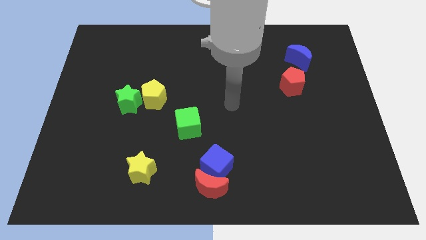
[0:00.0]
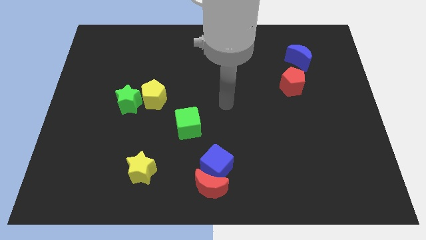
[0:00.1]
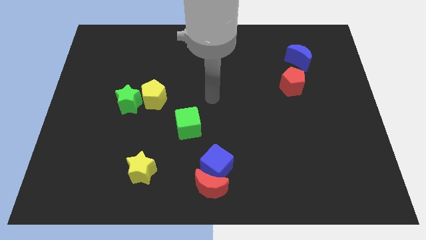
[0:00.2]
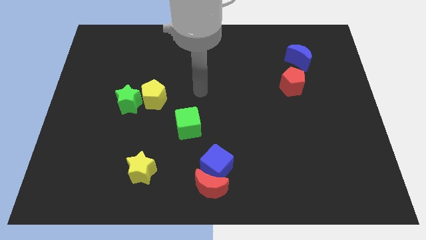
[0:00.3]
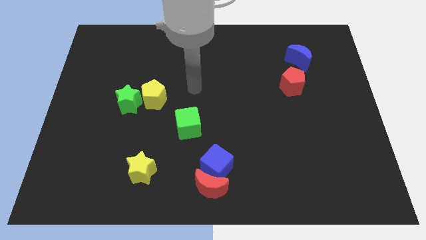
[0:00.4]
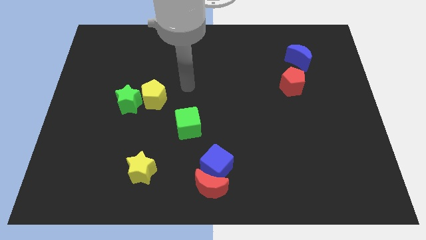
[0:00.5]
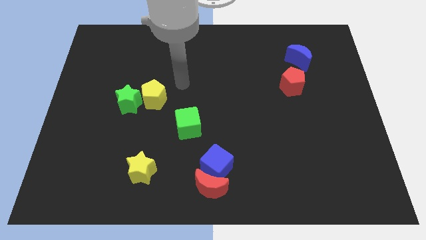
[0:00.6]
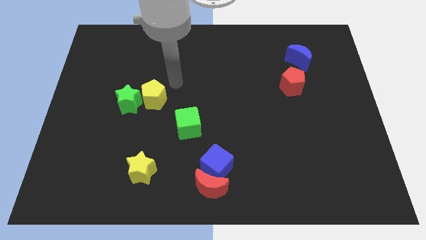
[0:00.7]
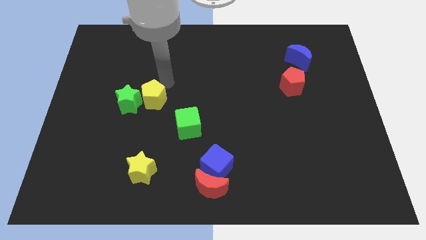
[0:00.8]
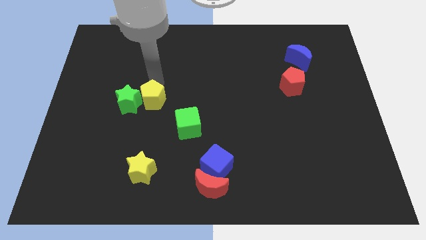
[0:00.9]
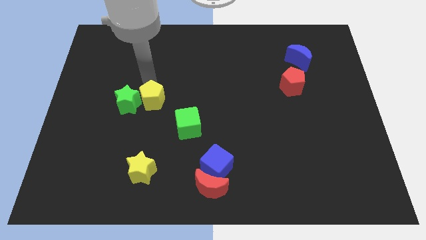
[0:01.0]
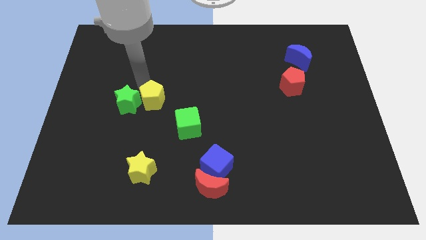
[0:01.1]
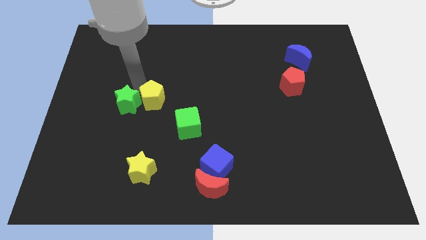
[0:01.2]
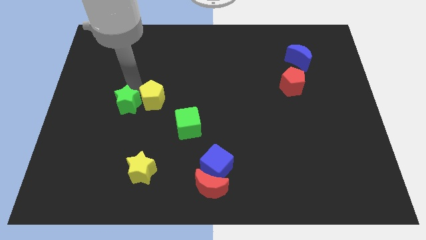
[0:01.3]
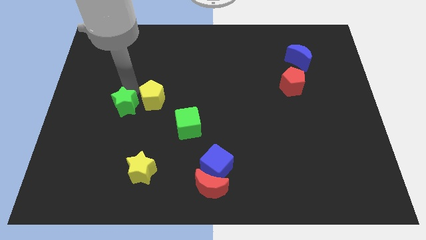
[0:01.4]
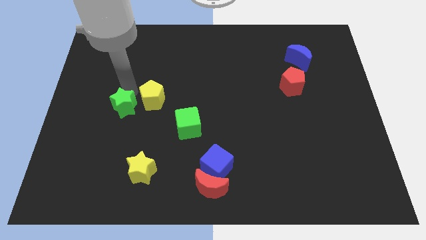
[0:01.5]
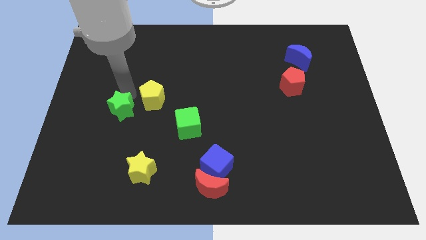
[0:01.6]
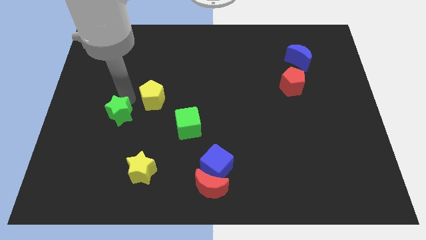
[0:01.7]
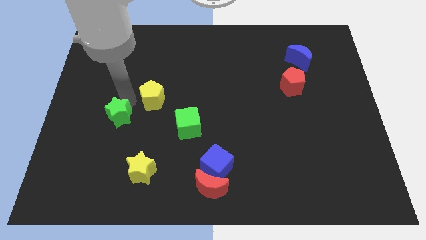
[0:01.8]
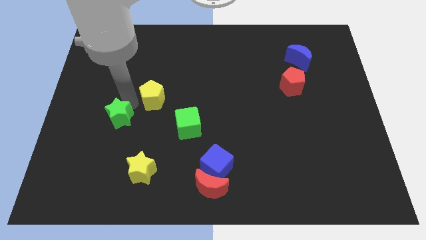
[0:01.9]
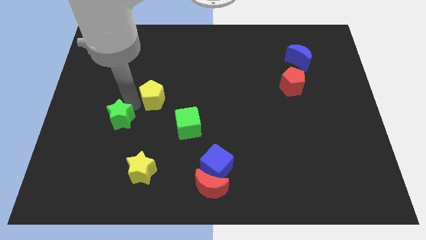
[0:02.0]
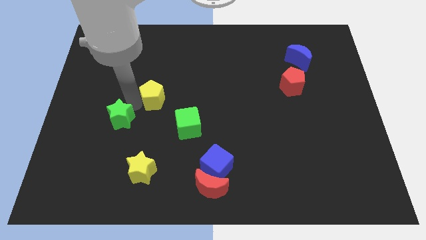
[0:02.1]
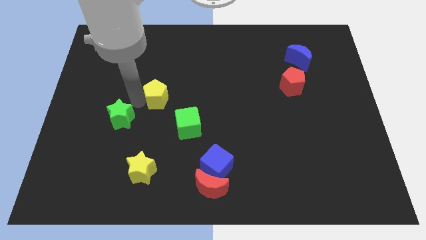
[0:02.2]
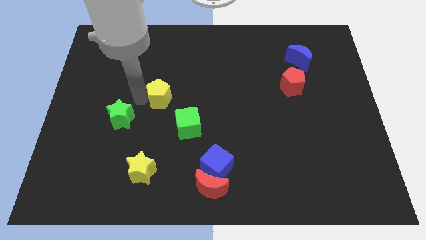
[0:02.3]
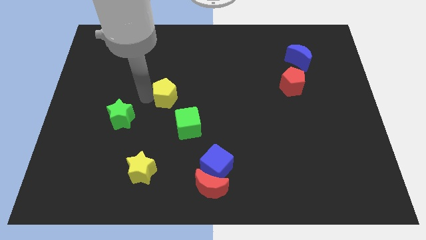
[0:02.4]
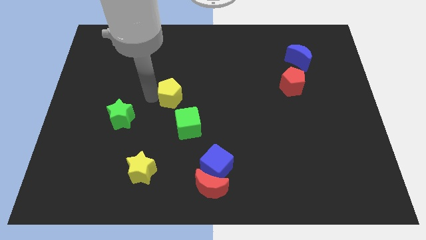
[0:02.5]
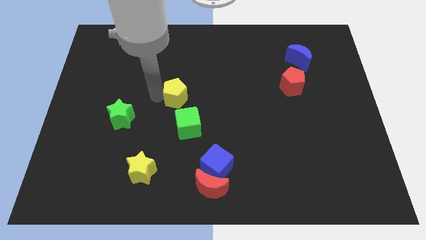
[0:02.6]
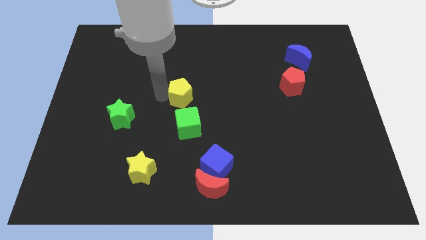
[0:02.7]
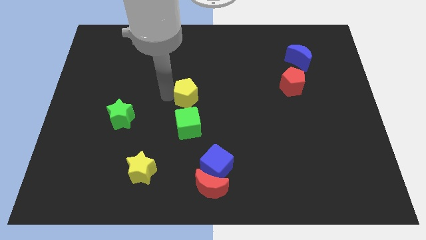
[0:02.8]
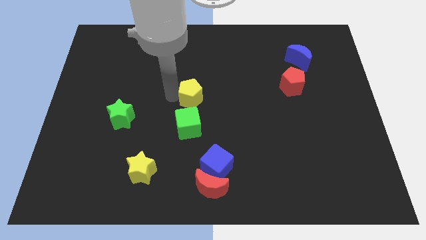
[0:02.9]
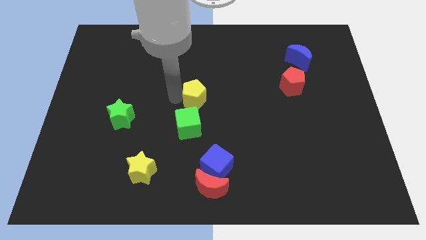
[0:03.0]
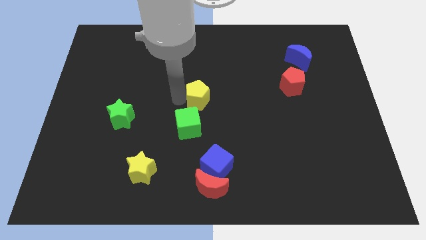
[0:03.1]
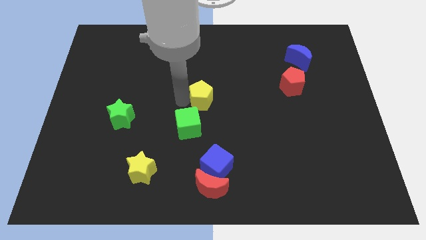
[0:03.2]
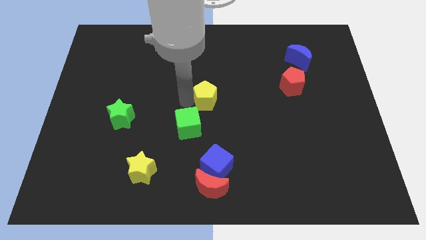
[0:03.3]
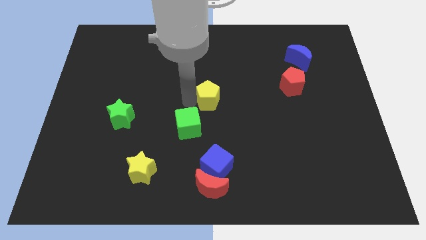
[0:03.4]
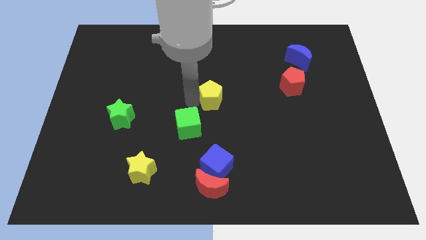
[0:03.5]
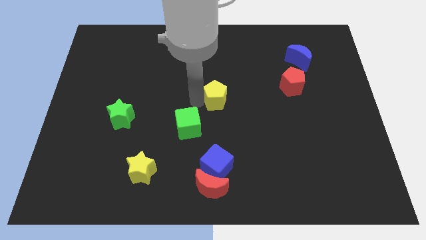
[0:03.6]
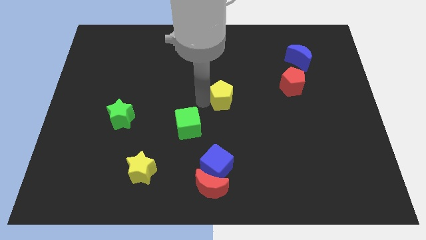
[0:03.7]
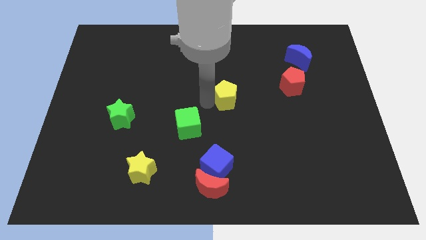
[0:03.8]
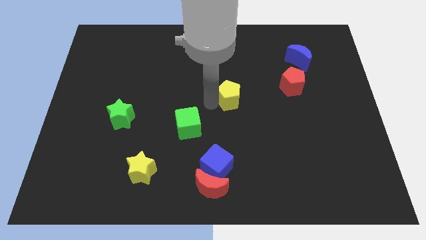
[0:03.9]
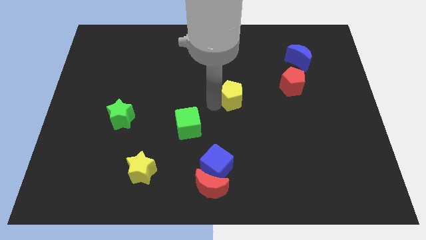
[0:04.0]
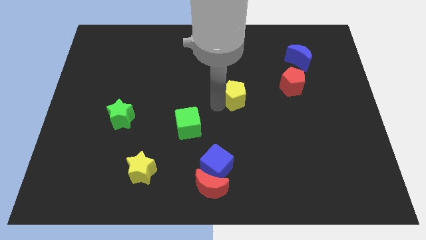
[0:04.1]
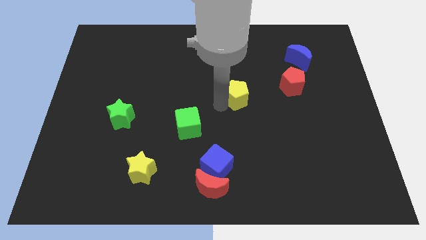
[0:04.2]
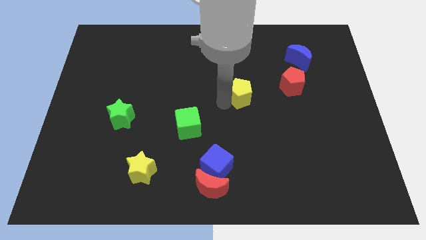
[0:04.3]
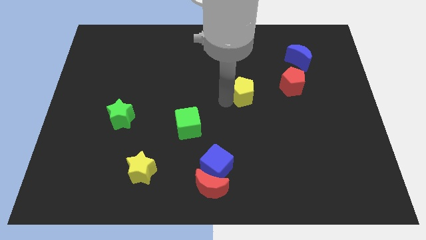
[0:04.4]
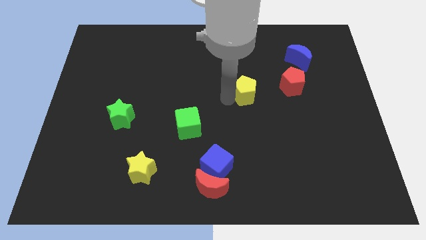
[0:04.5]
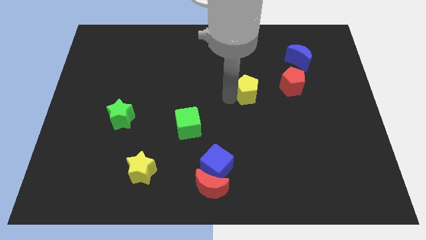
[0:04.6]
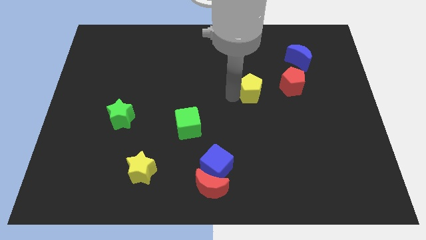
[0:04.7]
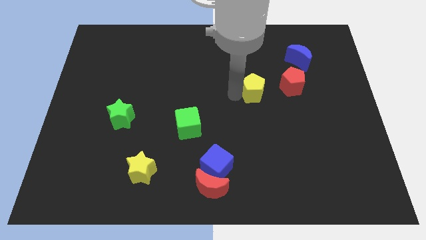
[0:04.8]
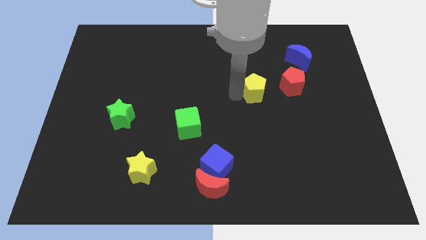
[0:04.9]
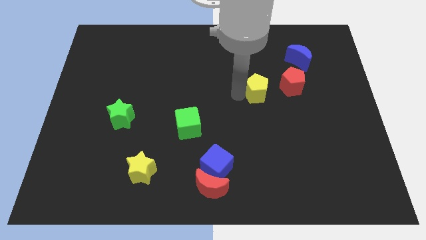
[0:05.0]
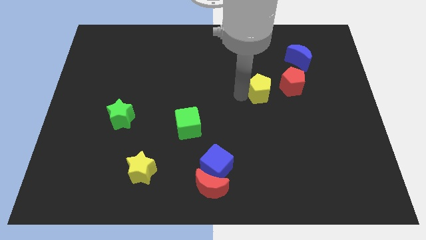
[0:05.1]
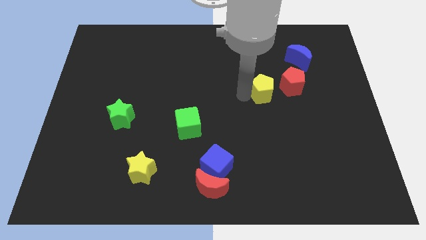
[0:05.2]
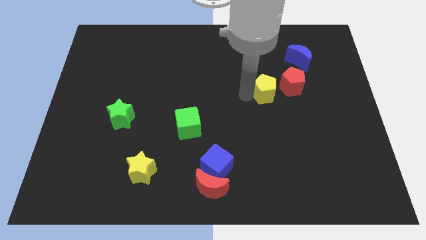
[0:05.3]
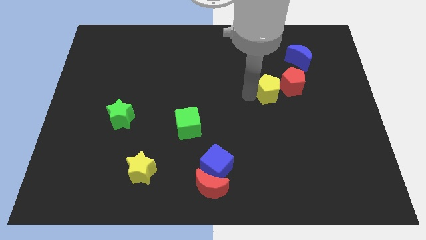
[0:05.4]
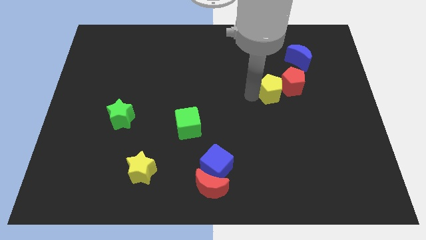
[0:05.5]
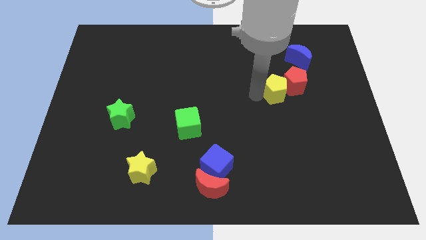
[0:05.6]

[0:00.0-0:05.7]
push the yellow pentagon next to the red pentagon

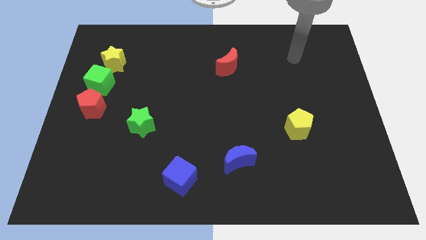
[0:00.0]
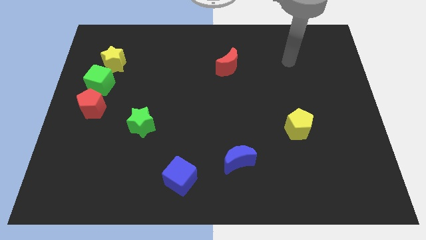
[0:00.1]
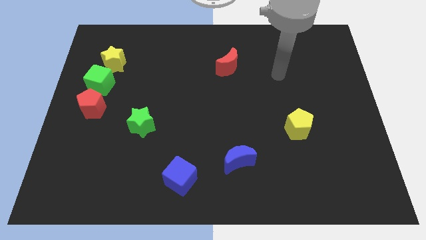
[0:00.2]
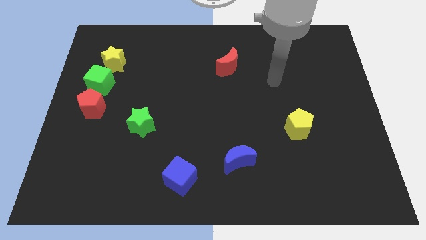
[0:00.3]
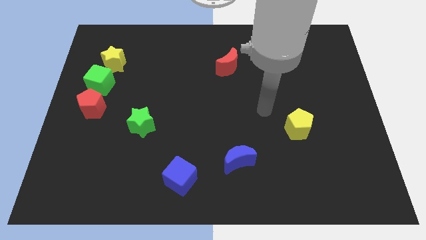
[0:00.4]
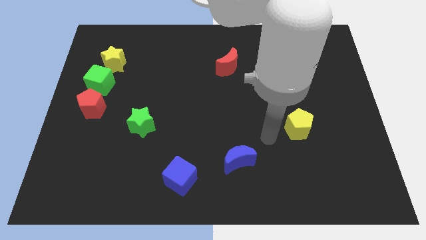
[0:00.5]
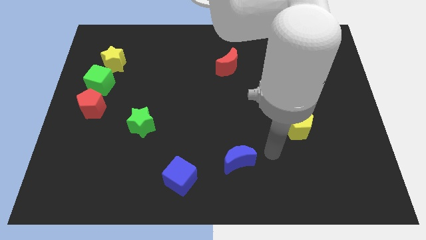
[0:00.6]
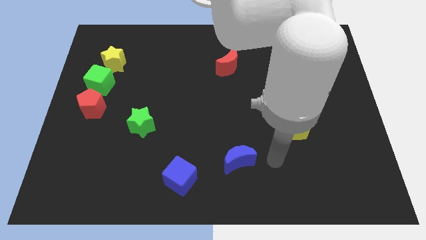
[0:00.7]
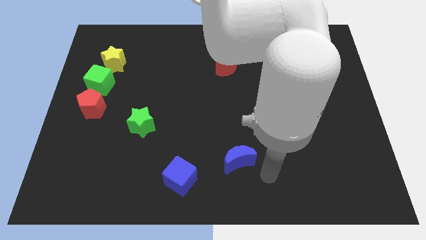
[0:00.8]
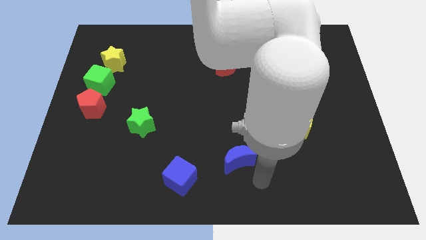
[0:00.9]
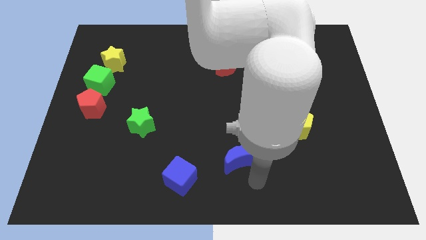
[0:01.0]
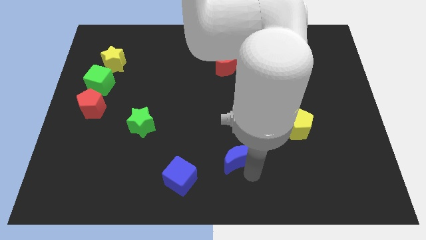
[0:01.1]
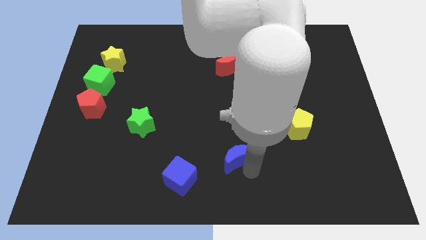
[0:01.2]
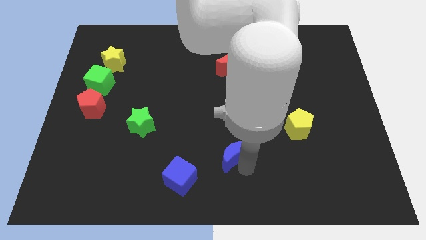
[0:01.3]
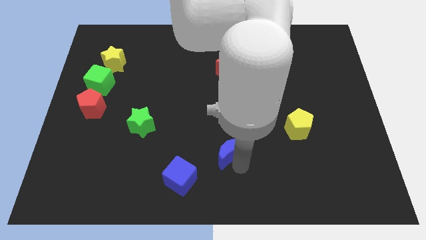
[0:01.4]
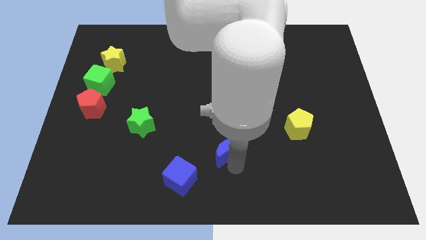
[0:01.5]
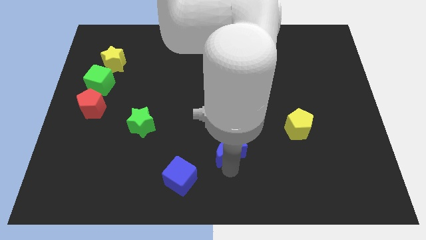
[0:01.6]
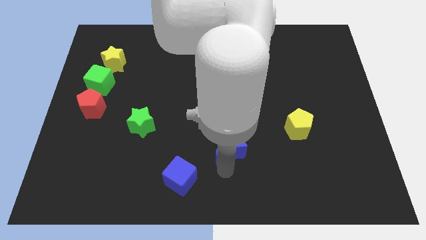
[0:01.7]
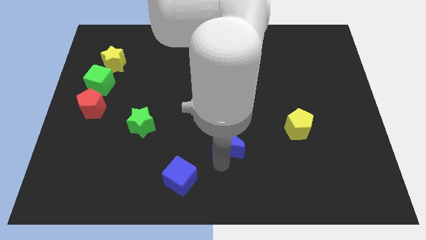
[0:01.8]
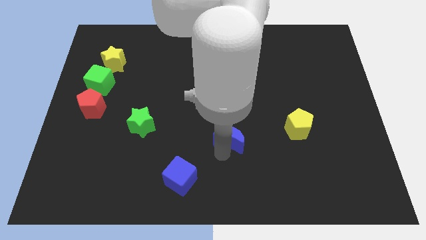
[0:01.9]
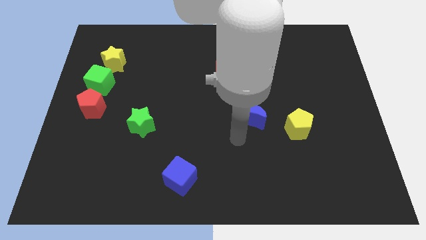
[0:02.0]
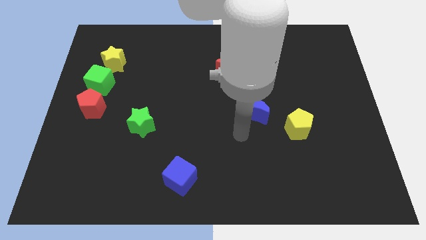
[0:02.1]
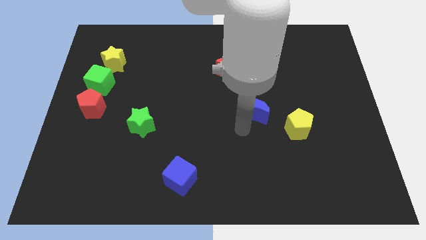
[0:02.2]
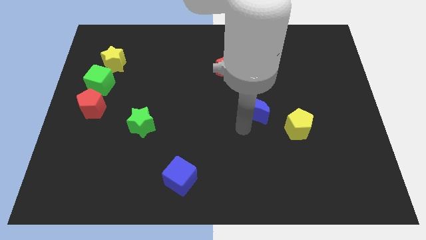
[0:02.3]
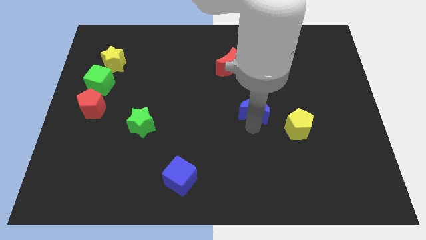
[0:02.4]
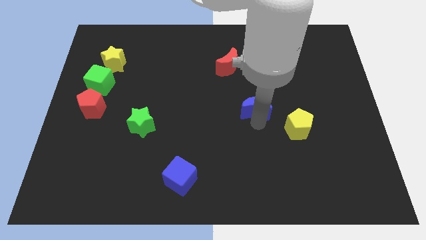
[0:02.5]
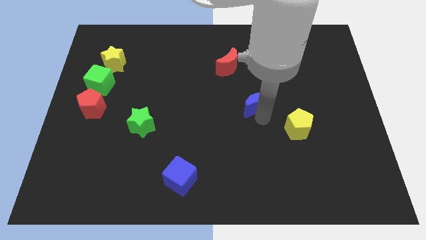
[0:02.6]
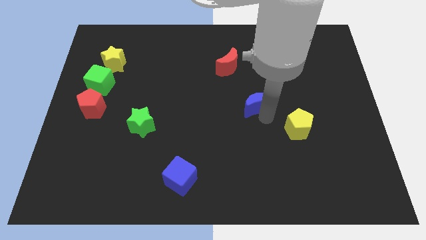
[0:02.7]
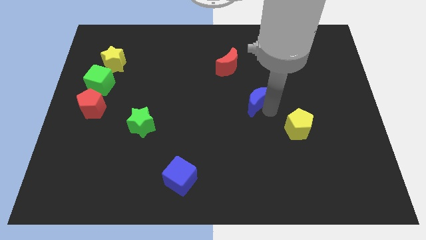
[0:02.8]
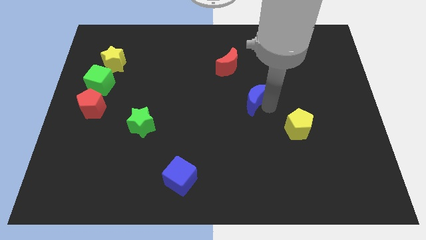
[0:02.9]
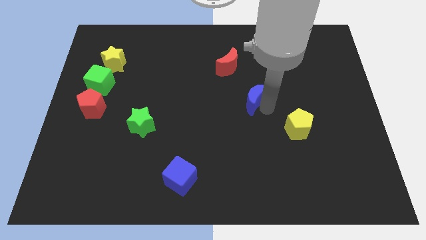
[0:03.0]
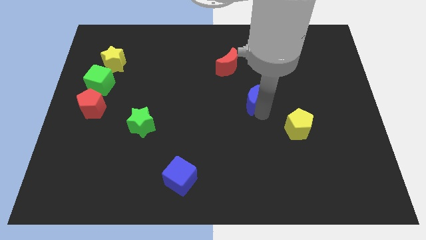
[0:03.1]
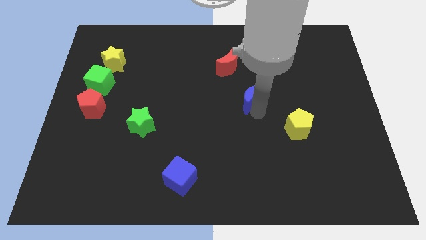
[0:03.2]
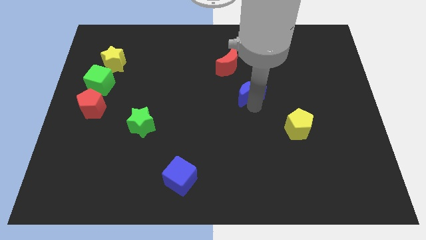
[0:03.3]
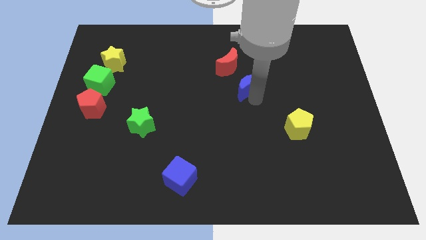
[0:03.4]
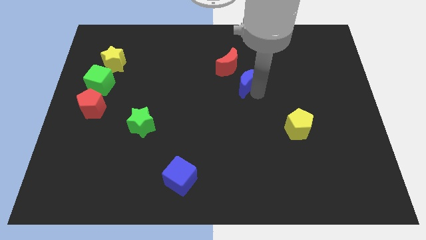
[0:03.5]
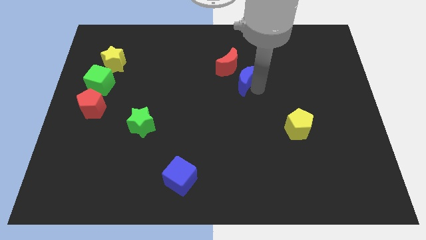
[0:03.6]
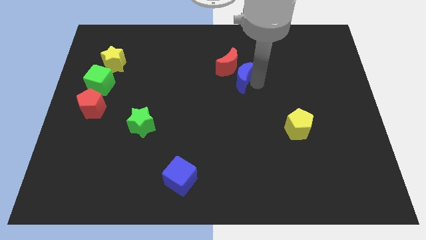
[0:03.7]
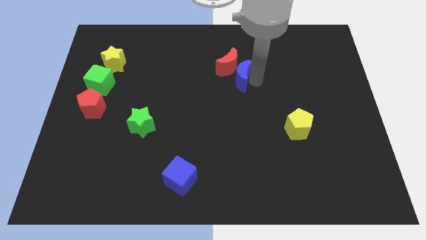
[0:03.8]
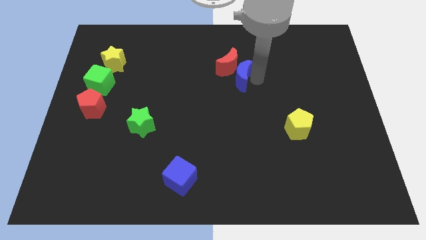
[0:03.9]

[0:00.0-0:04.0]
slide the blue moon close to the red moon
